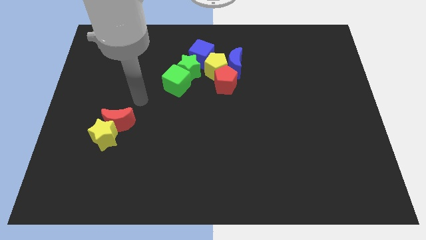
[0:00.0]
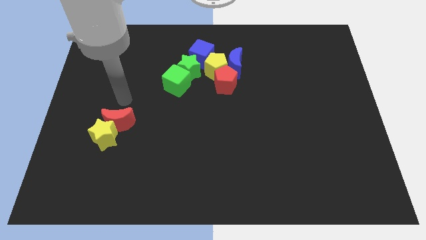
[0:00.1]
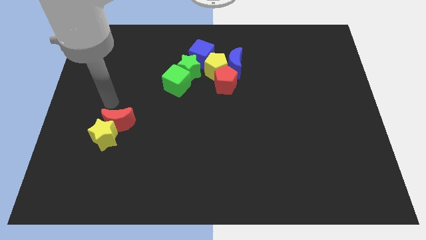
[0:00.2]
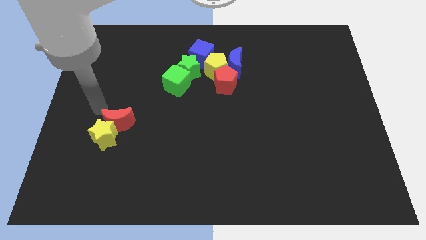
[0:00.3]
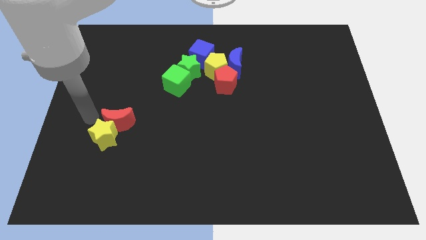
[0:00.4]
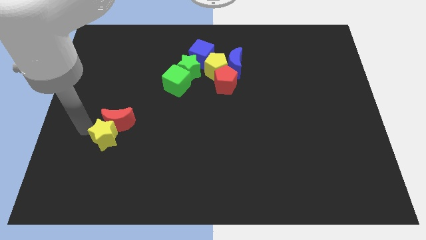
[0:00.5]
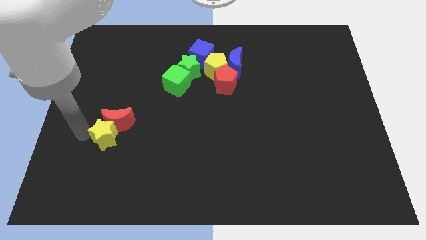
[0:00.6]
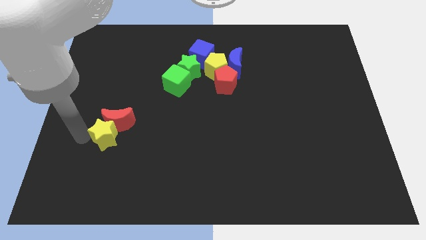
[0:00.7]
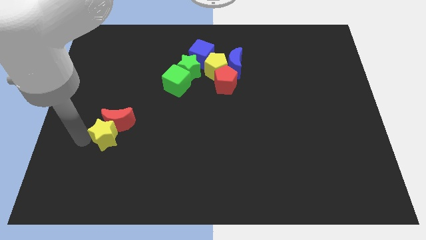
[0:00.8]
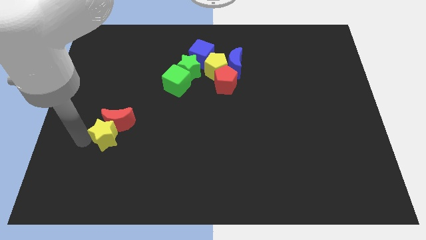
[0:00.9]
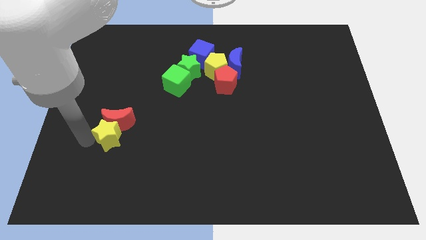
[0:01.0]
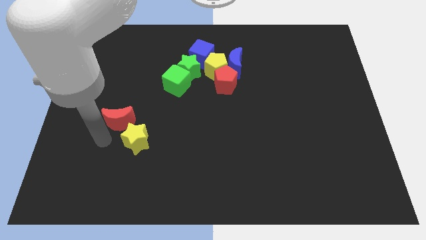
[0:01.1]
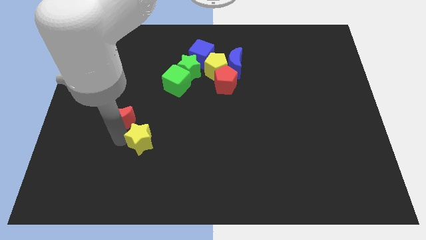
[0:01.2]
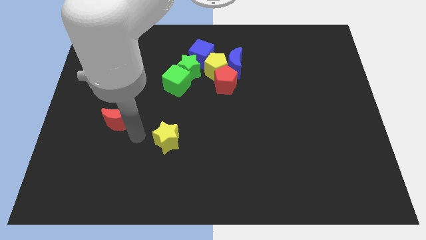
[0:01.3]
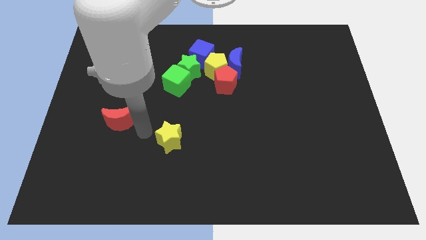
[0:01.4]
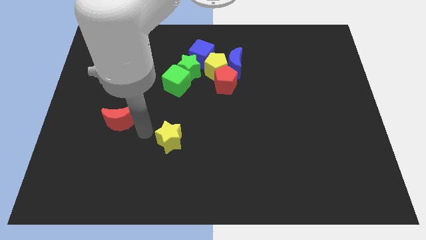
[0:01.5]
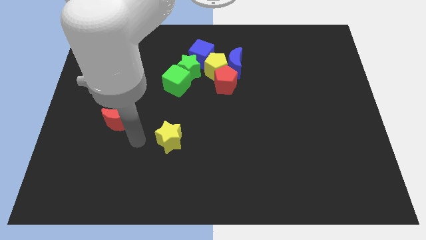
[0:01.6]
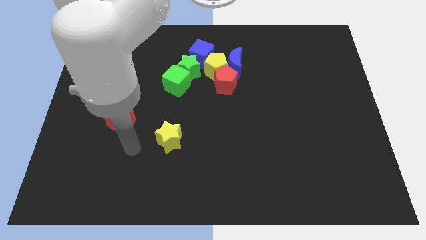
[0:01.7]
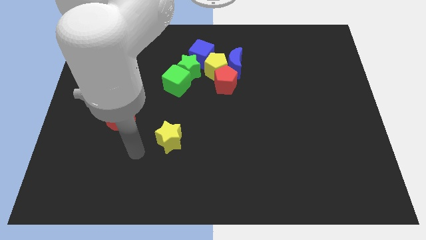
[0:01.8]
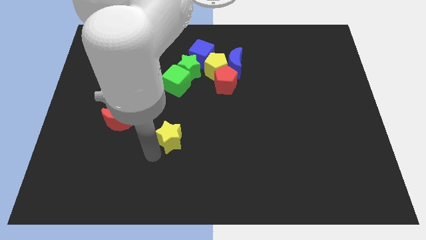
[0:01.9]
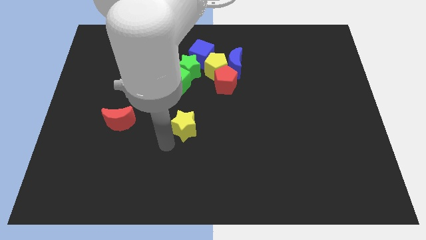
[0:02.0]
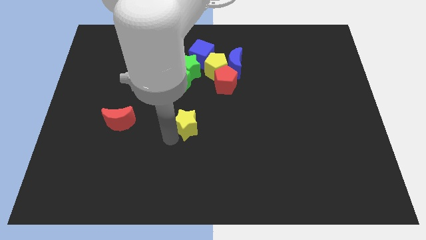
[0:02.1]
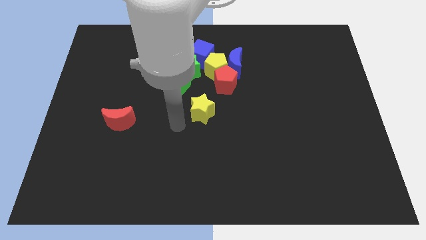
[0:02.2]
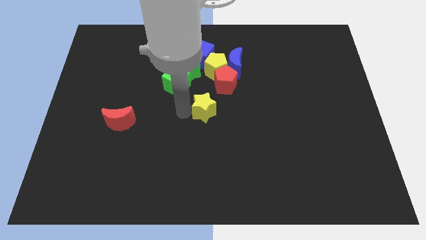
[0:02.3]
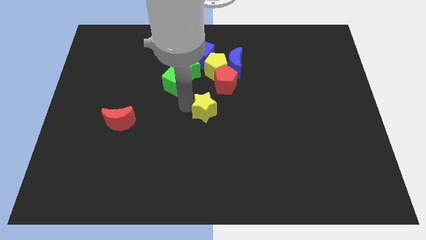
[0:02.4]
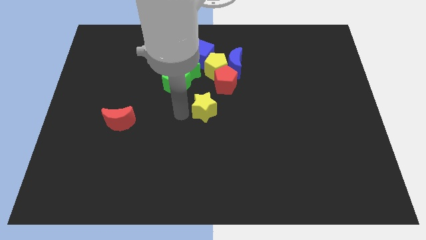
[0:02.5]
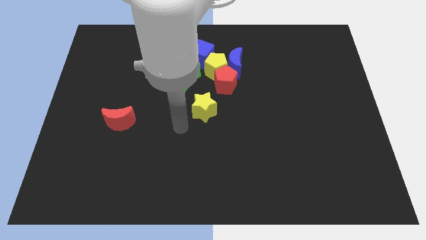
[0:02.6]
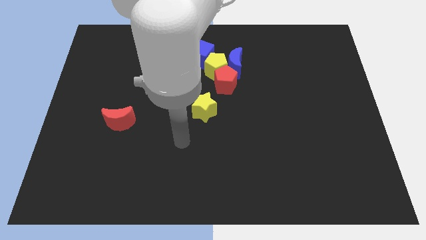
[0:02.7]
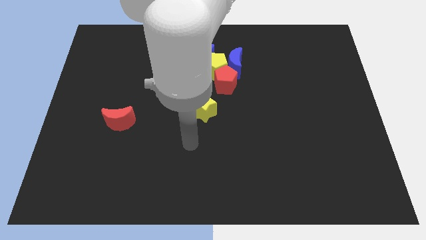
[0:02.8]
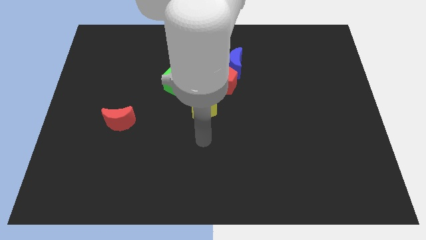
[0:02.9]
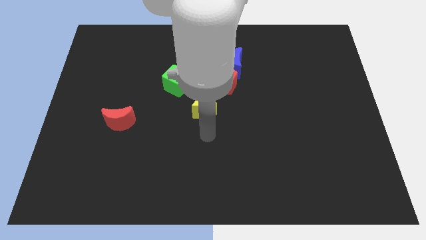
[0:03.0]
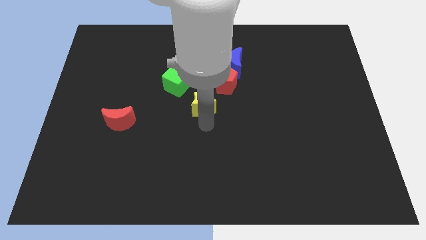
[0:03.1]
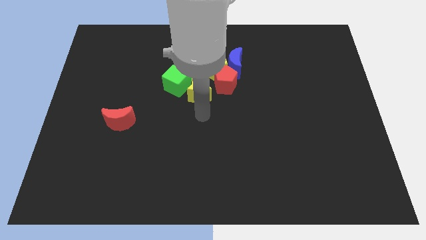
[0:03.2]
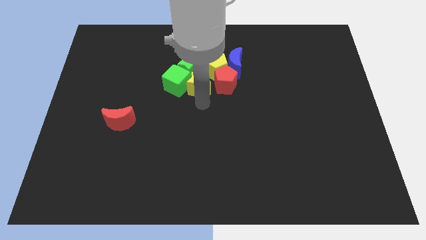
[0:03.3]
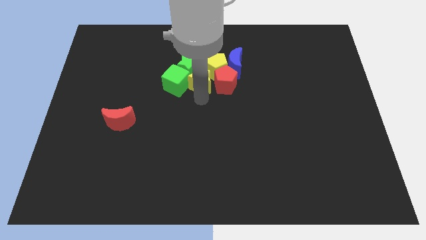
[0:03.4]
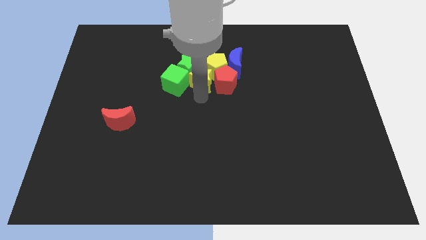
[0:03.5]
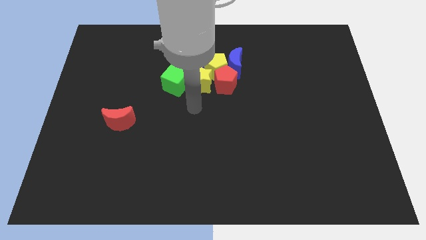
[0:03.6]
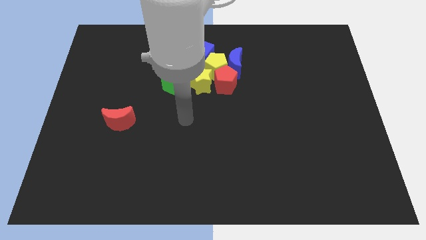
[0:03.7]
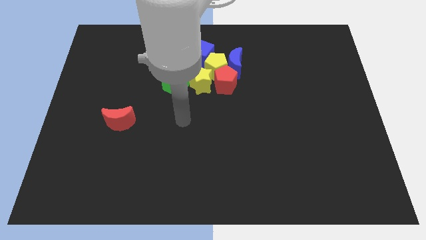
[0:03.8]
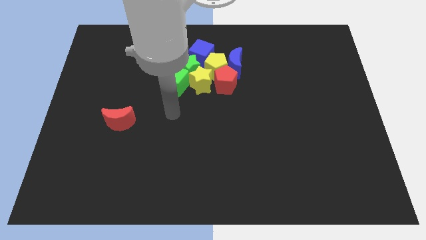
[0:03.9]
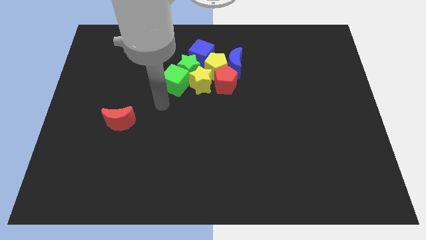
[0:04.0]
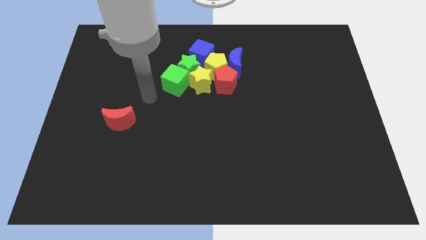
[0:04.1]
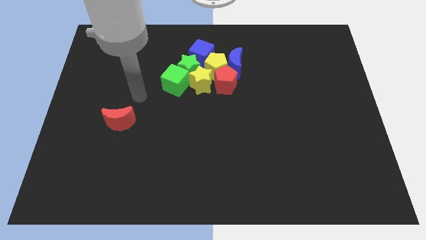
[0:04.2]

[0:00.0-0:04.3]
move the yellow star into group of blocks

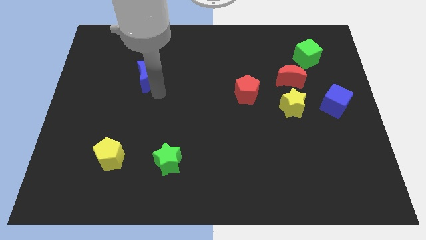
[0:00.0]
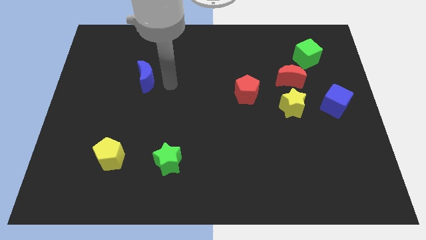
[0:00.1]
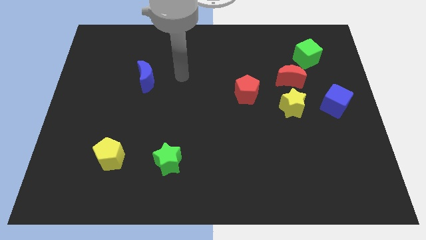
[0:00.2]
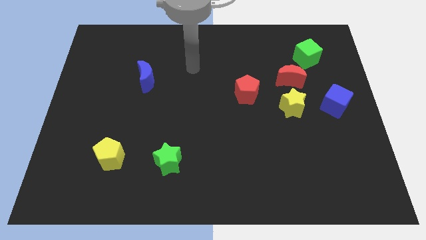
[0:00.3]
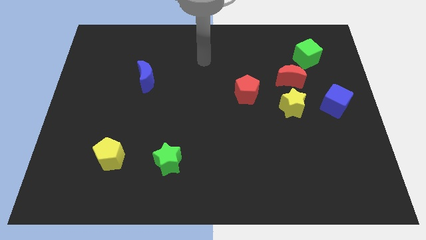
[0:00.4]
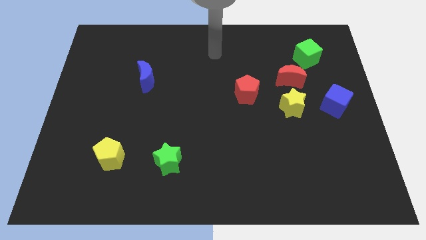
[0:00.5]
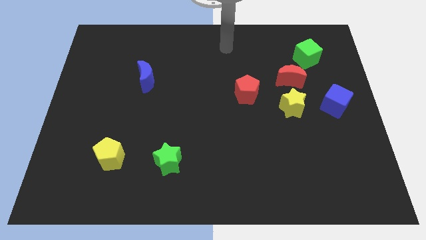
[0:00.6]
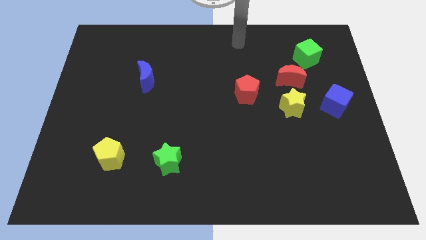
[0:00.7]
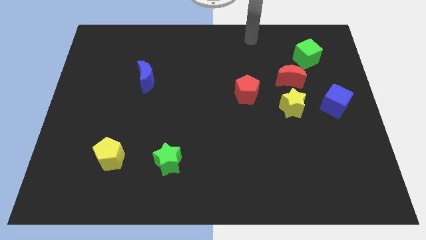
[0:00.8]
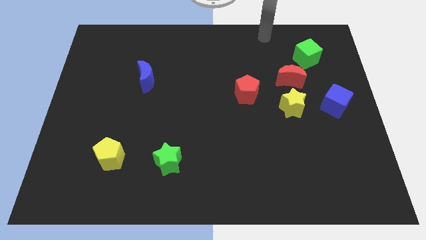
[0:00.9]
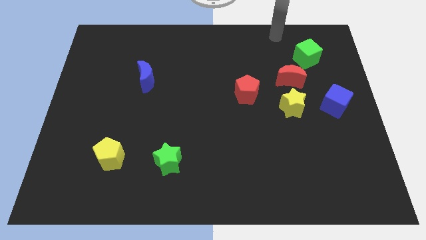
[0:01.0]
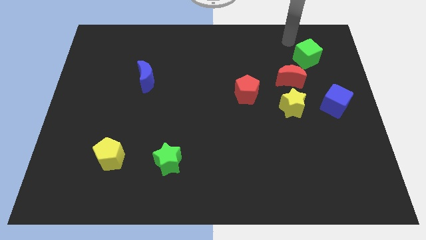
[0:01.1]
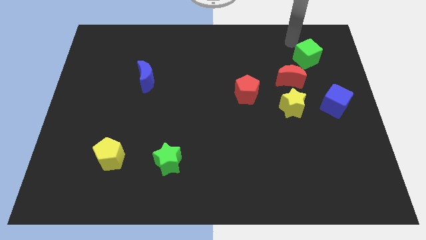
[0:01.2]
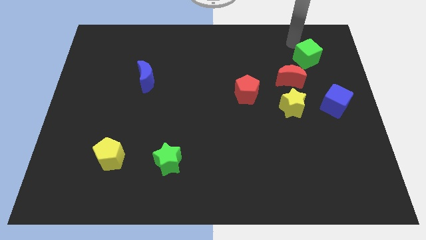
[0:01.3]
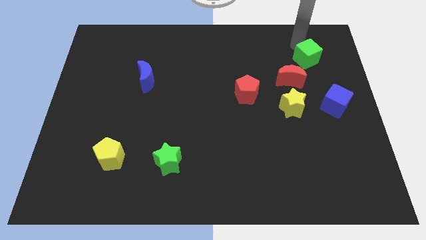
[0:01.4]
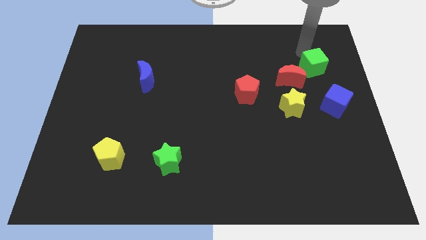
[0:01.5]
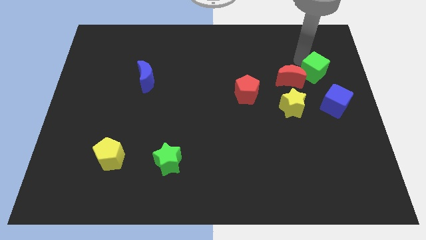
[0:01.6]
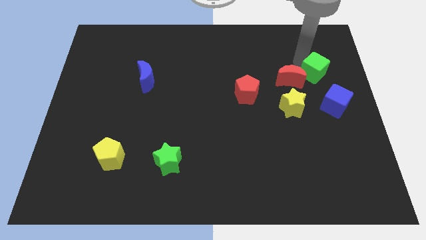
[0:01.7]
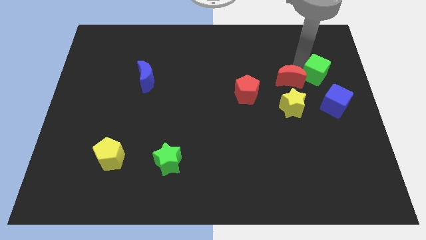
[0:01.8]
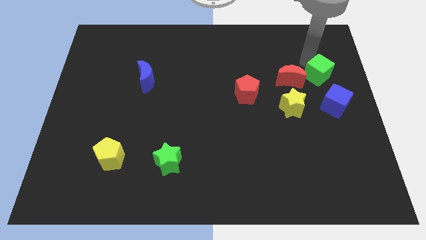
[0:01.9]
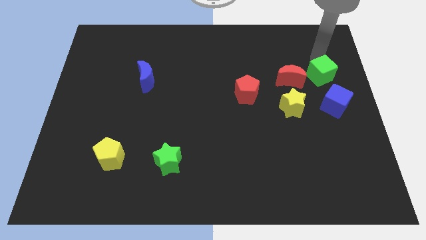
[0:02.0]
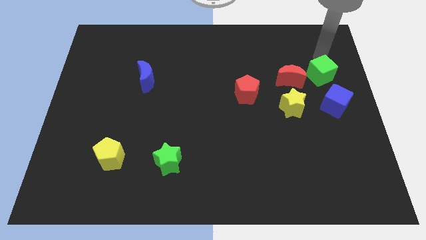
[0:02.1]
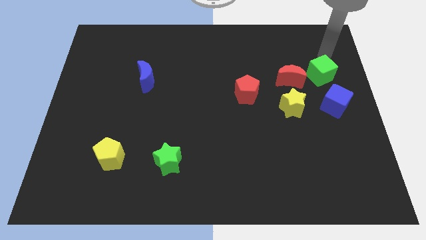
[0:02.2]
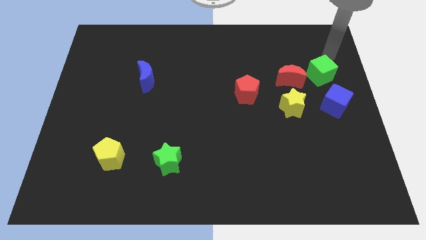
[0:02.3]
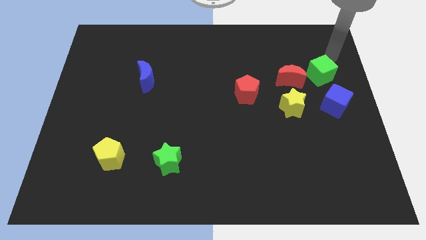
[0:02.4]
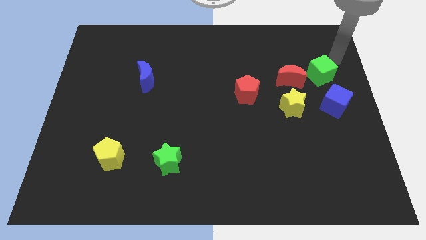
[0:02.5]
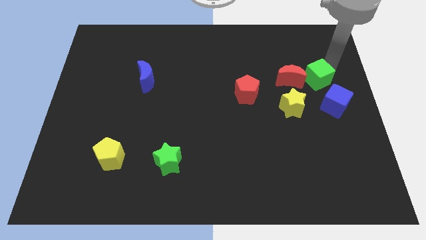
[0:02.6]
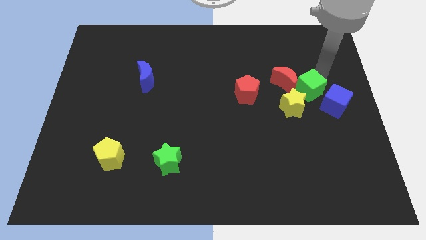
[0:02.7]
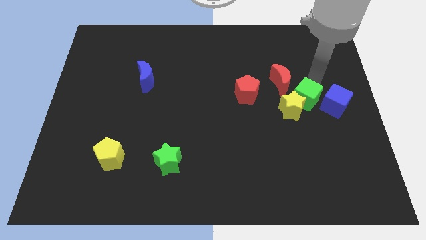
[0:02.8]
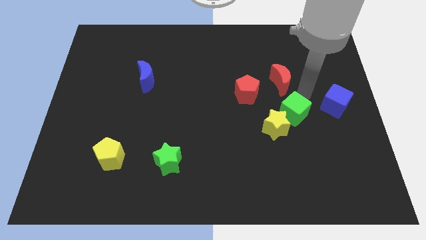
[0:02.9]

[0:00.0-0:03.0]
push the green cube into the yellow star

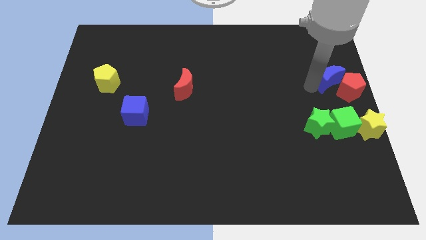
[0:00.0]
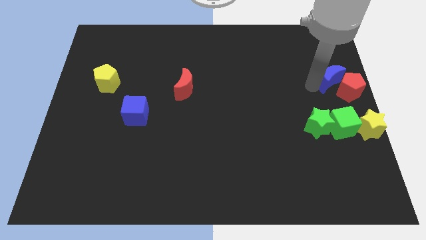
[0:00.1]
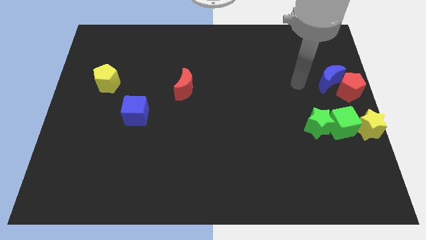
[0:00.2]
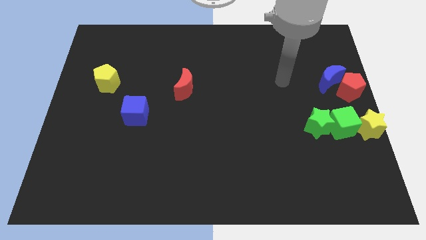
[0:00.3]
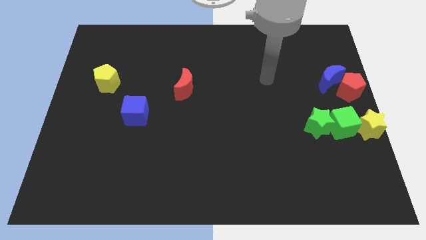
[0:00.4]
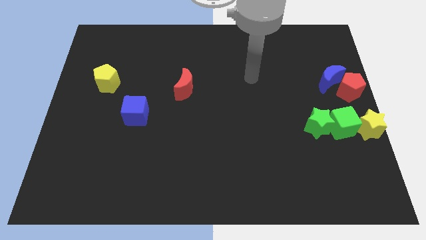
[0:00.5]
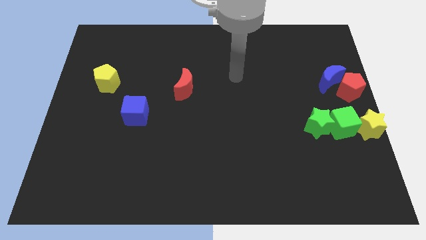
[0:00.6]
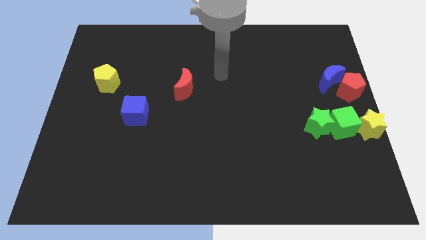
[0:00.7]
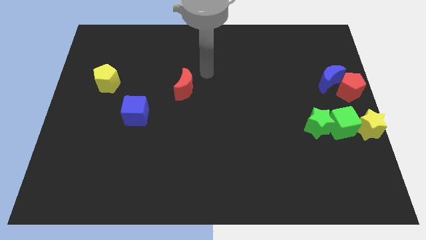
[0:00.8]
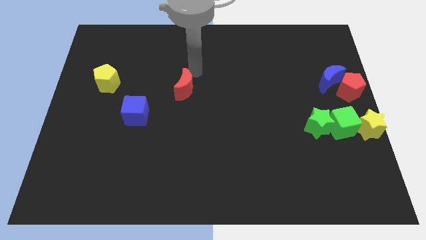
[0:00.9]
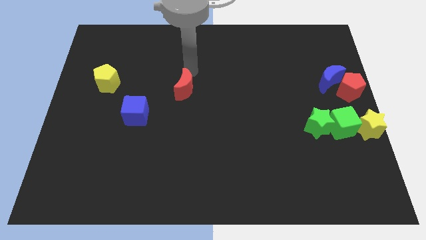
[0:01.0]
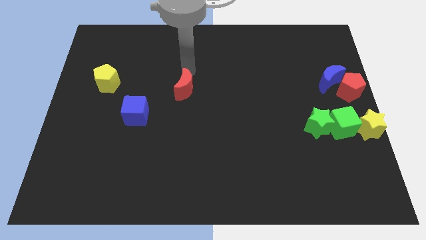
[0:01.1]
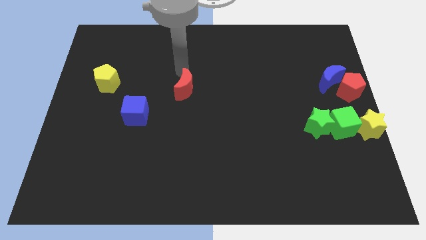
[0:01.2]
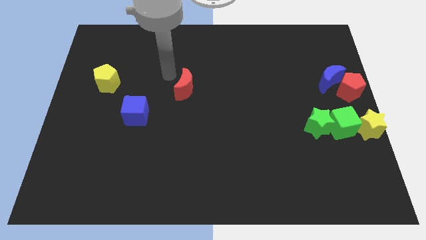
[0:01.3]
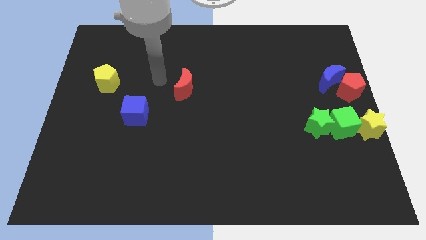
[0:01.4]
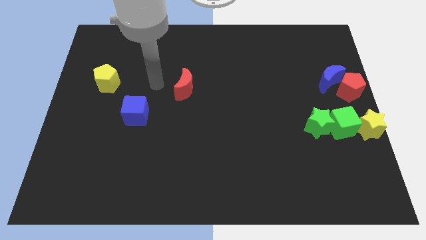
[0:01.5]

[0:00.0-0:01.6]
move away from the blue moon
